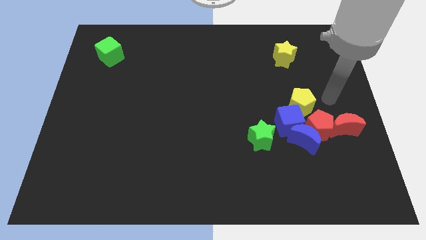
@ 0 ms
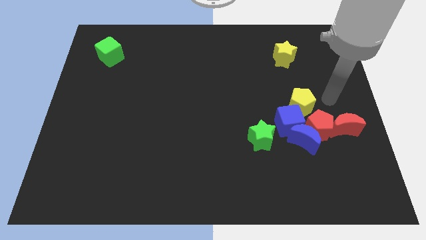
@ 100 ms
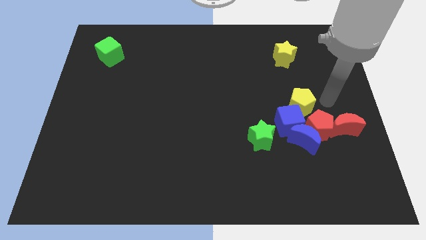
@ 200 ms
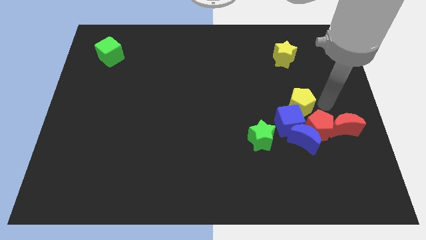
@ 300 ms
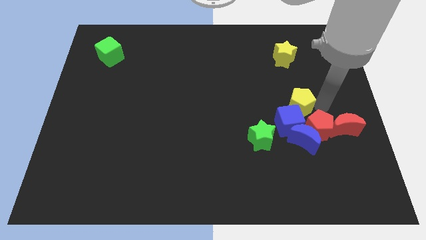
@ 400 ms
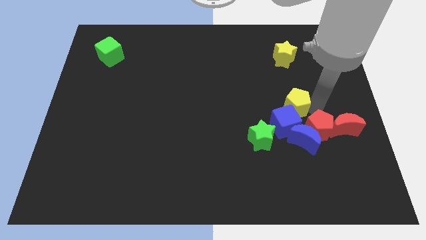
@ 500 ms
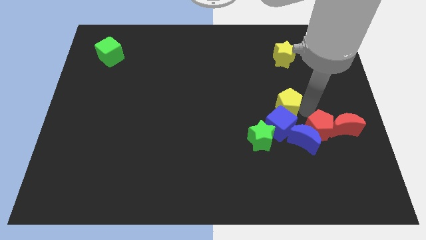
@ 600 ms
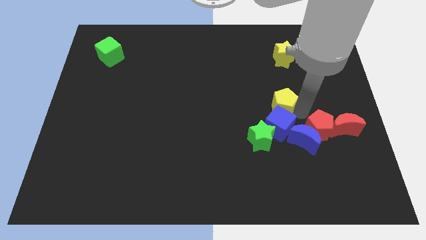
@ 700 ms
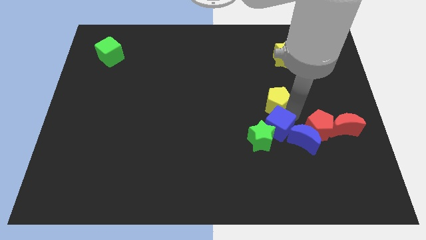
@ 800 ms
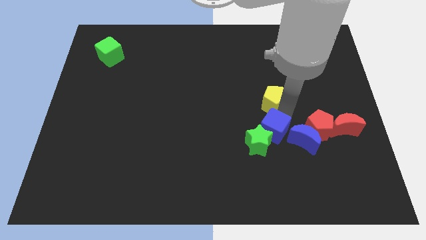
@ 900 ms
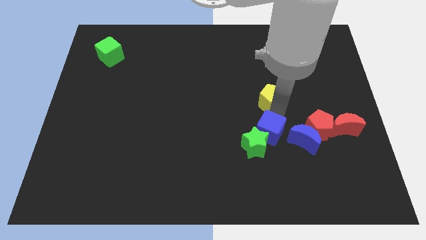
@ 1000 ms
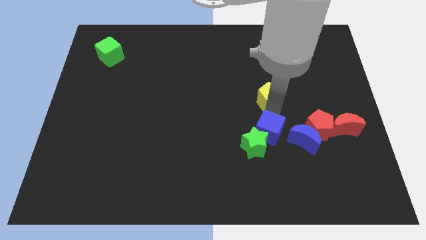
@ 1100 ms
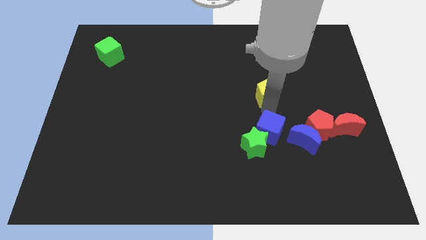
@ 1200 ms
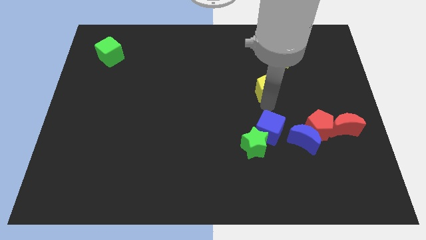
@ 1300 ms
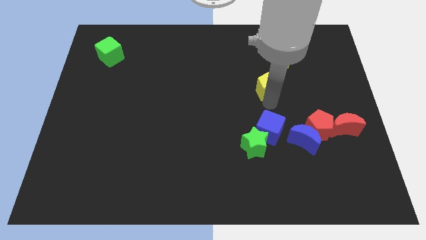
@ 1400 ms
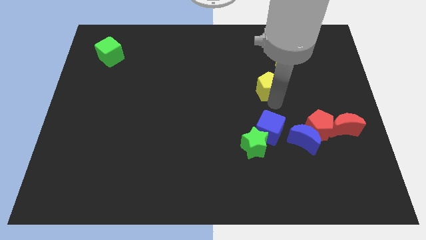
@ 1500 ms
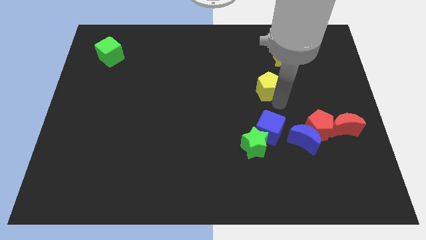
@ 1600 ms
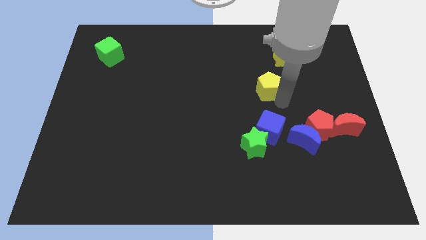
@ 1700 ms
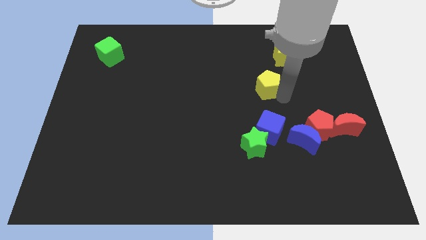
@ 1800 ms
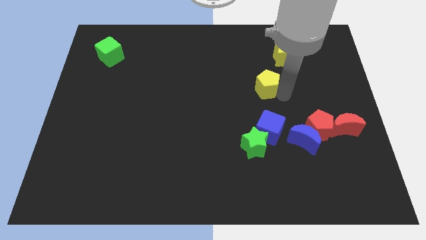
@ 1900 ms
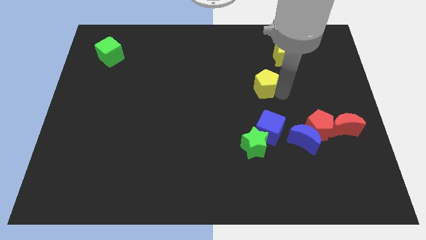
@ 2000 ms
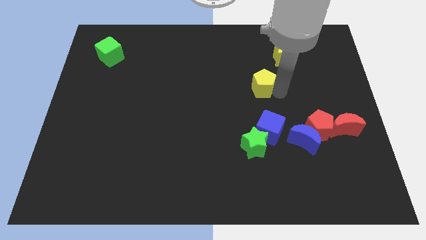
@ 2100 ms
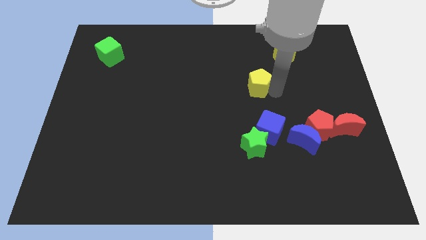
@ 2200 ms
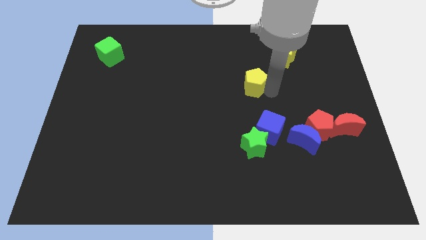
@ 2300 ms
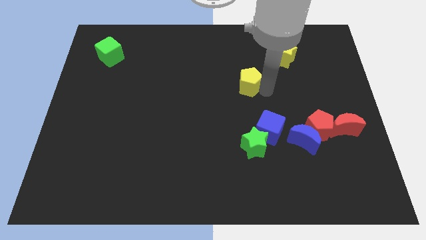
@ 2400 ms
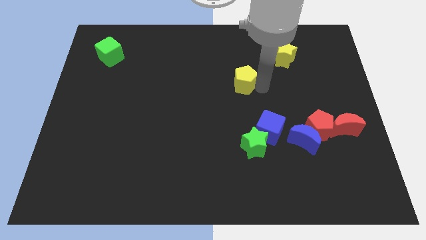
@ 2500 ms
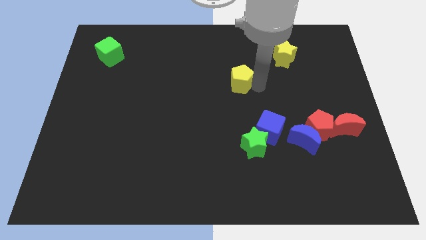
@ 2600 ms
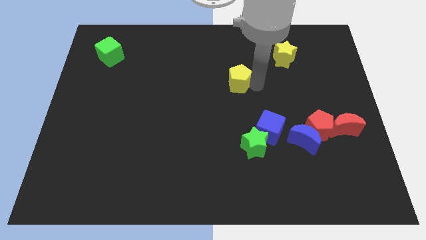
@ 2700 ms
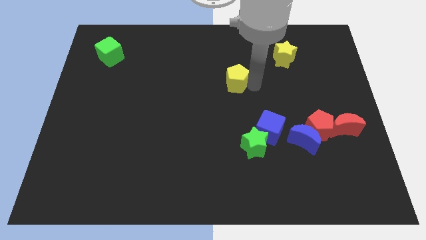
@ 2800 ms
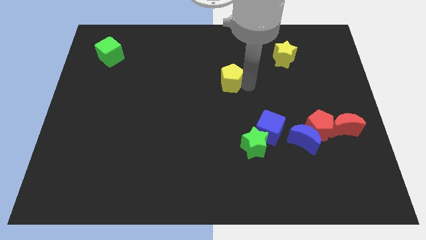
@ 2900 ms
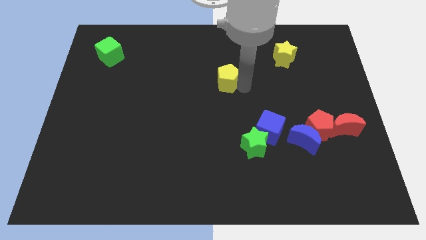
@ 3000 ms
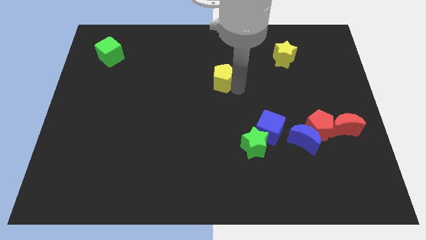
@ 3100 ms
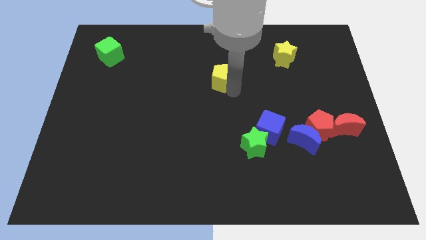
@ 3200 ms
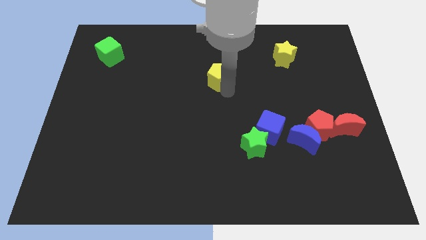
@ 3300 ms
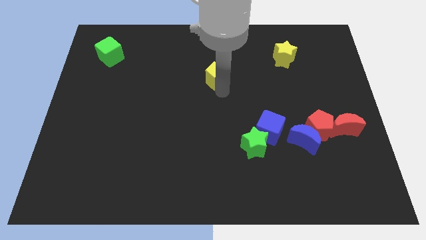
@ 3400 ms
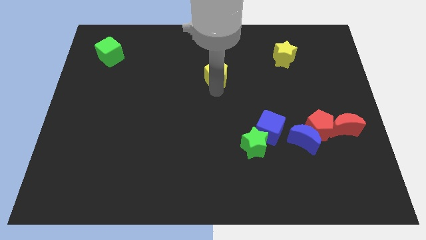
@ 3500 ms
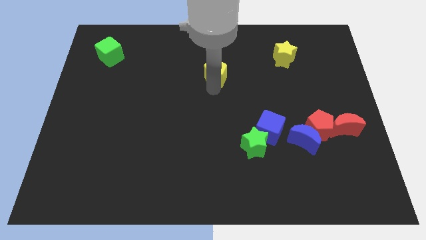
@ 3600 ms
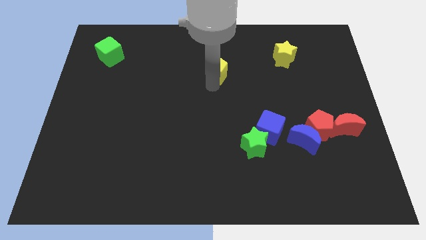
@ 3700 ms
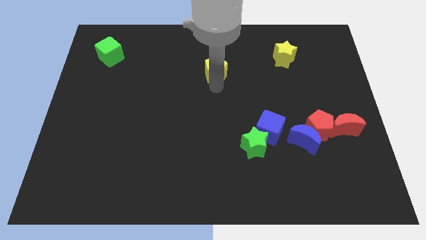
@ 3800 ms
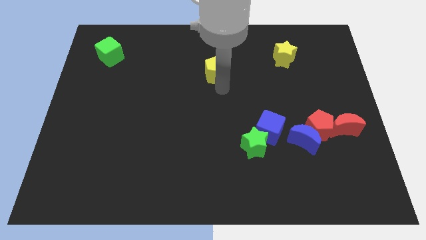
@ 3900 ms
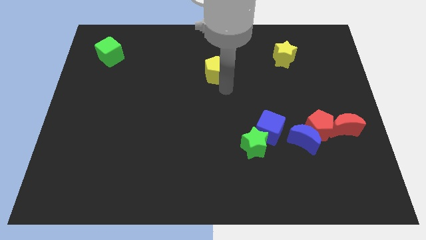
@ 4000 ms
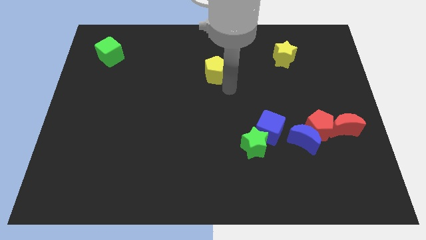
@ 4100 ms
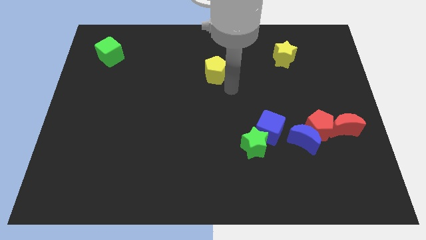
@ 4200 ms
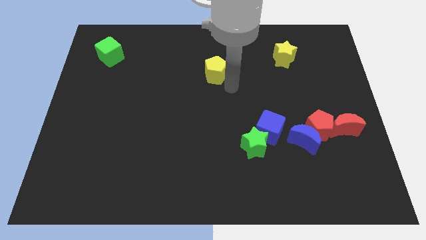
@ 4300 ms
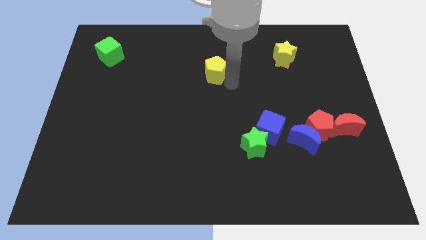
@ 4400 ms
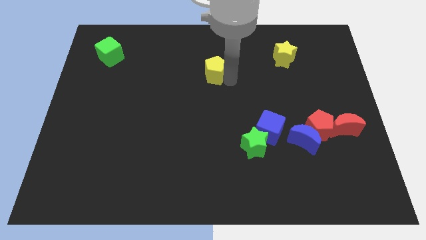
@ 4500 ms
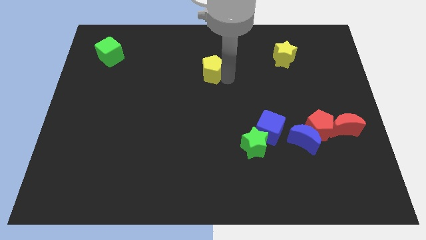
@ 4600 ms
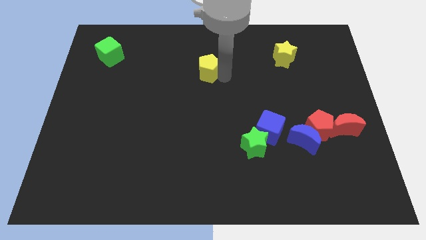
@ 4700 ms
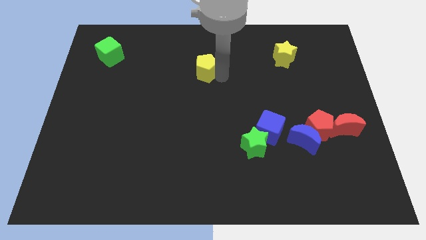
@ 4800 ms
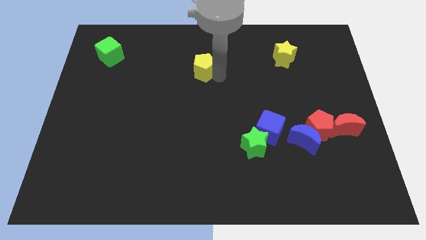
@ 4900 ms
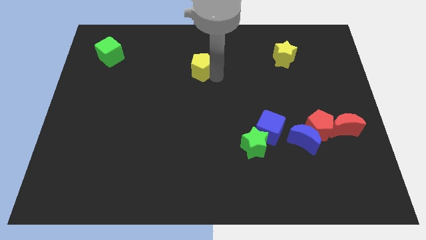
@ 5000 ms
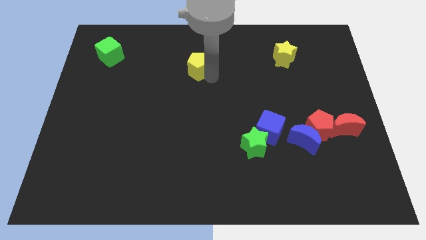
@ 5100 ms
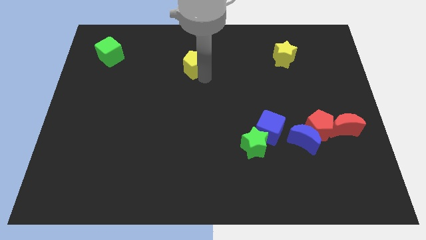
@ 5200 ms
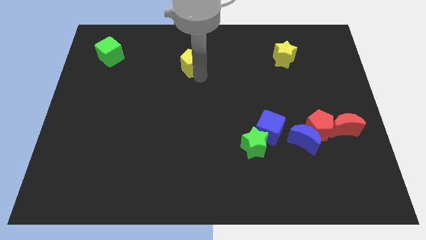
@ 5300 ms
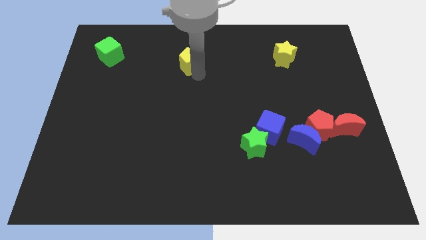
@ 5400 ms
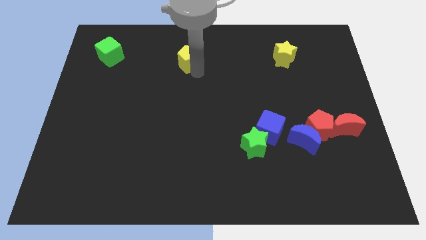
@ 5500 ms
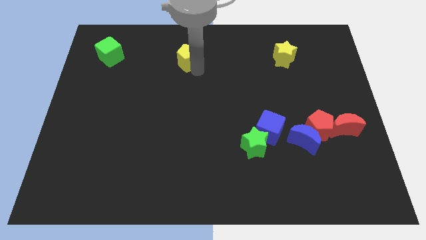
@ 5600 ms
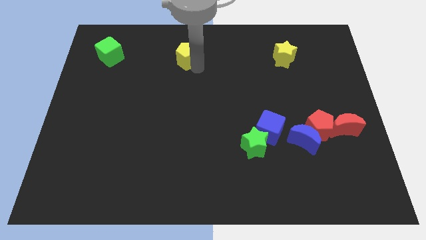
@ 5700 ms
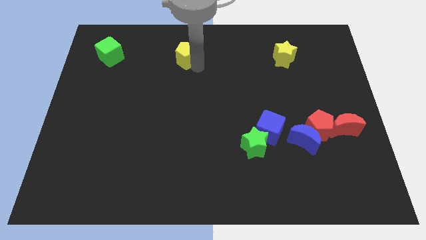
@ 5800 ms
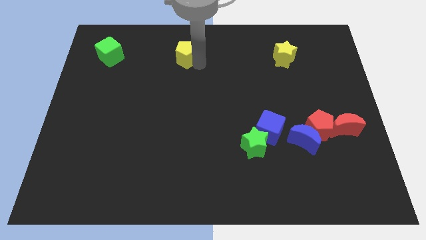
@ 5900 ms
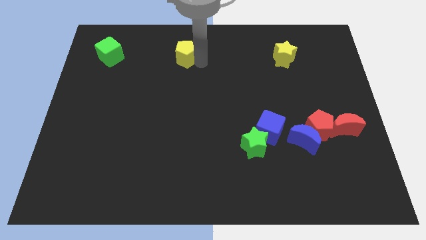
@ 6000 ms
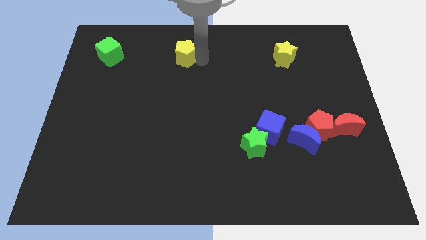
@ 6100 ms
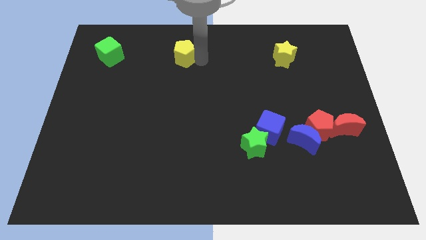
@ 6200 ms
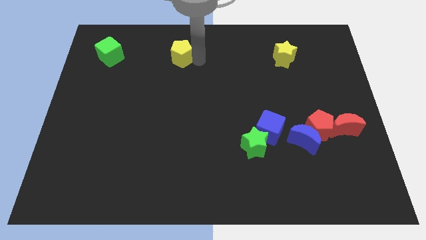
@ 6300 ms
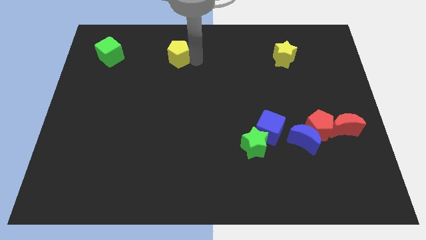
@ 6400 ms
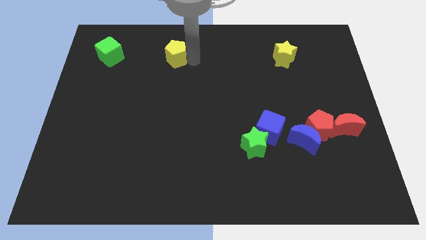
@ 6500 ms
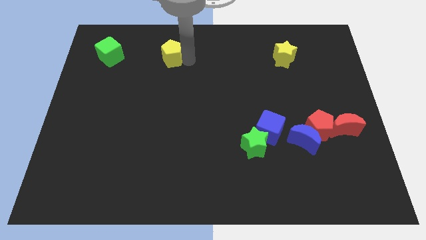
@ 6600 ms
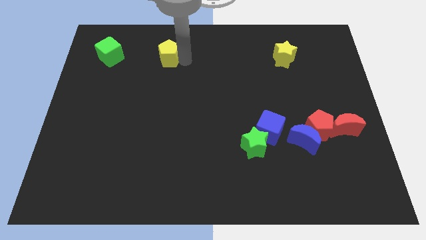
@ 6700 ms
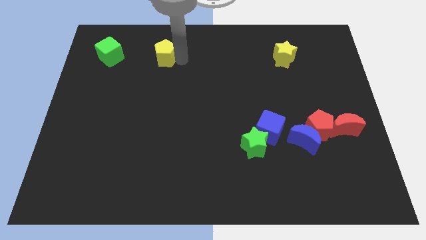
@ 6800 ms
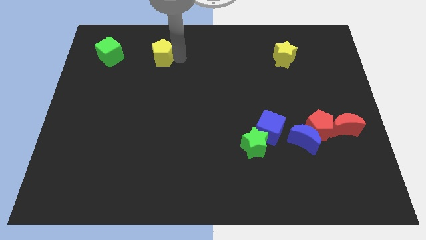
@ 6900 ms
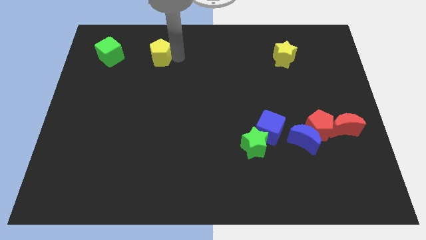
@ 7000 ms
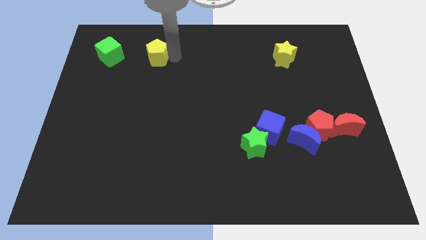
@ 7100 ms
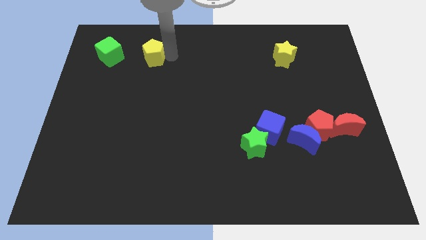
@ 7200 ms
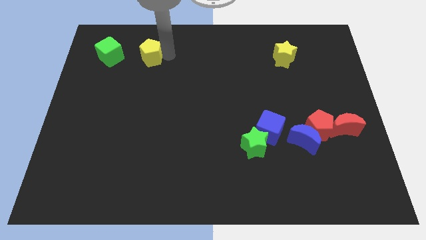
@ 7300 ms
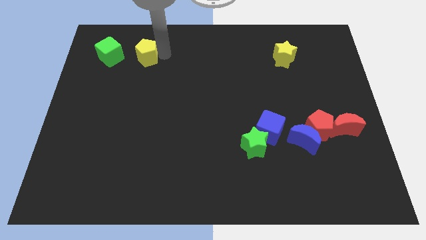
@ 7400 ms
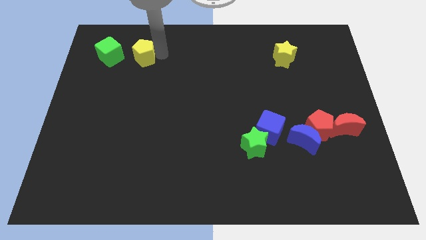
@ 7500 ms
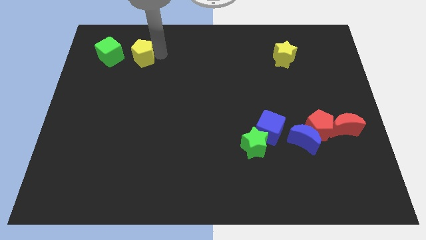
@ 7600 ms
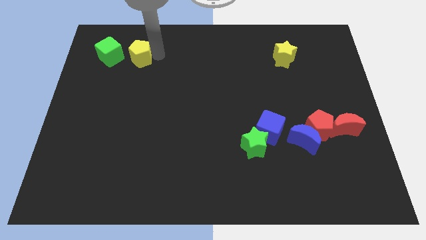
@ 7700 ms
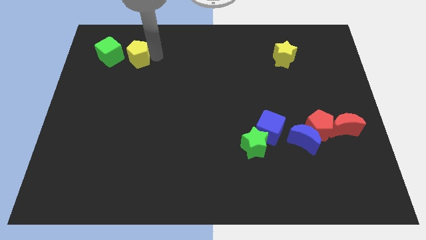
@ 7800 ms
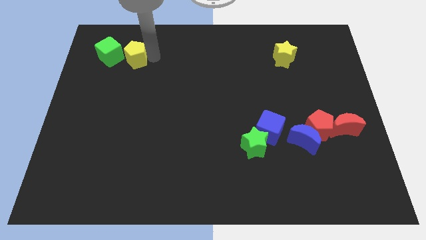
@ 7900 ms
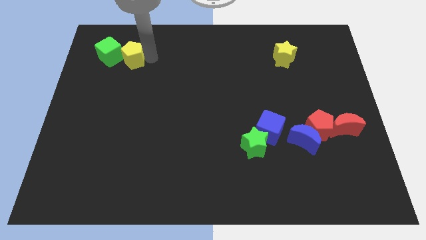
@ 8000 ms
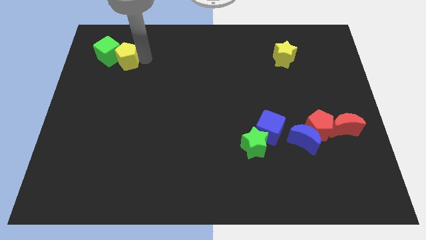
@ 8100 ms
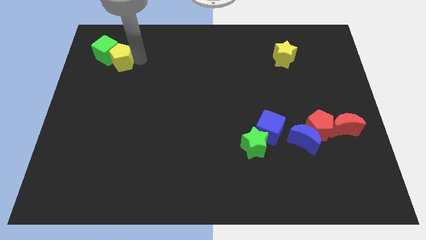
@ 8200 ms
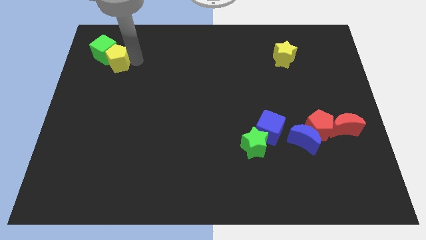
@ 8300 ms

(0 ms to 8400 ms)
put the yellow pentagon close to the green cube

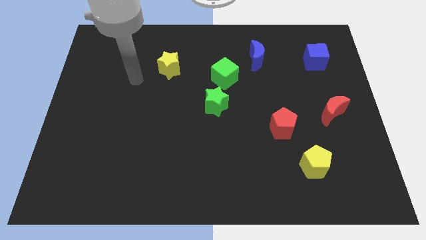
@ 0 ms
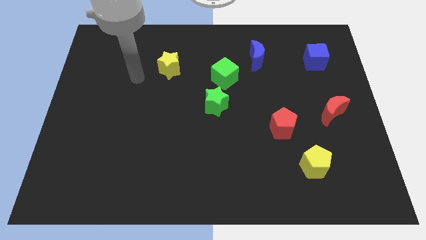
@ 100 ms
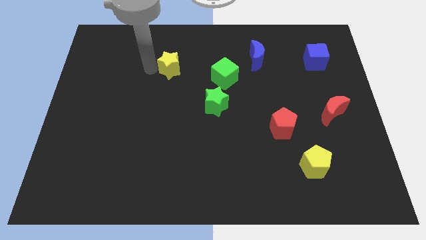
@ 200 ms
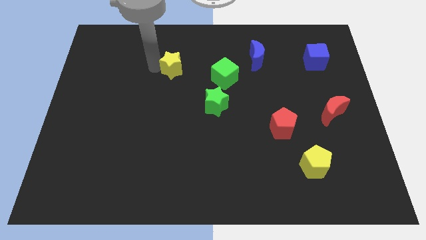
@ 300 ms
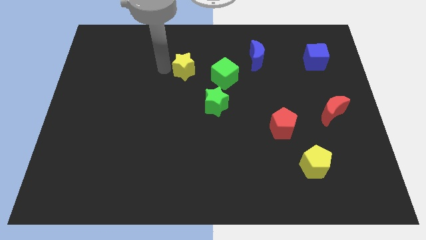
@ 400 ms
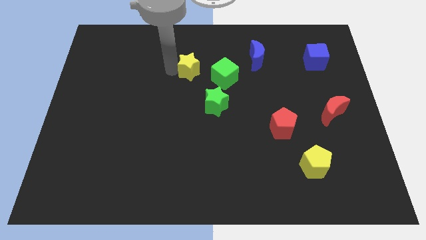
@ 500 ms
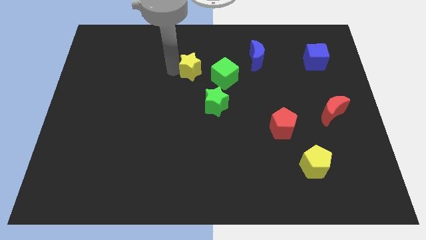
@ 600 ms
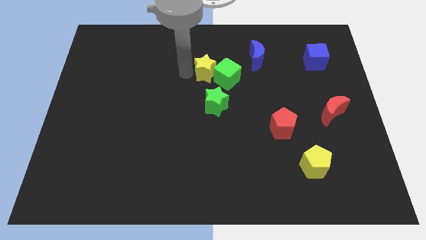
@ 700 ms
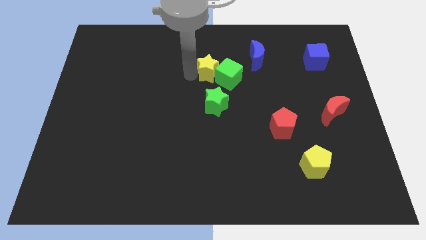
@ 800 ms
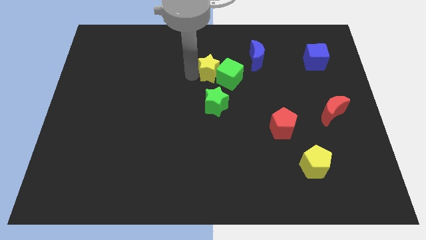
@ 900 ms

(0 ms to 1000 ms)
put the yellow star to the green cube
